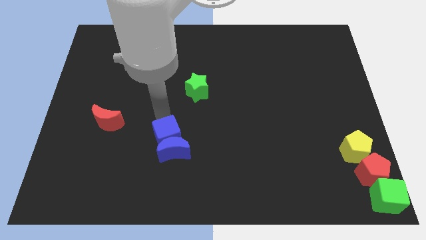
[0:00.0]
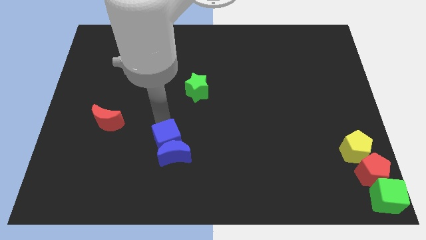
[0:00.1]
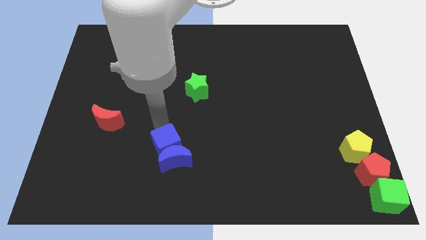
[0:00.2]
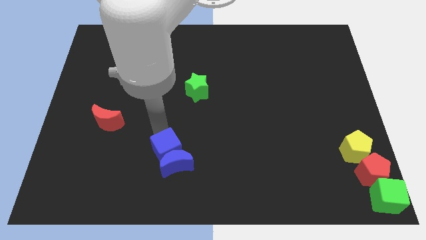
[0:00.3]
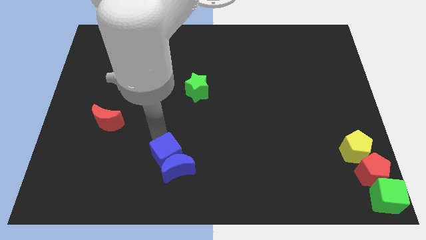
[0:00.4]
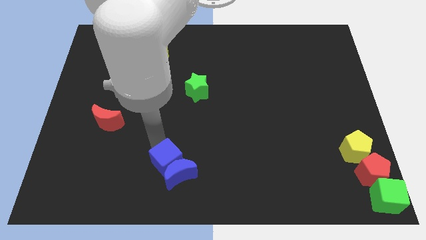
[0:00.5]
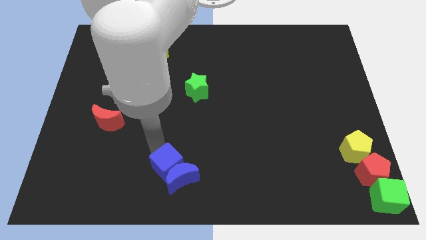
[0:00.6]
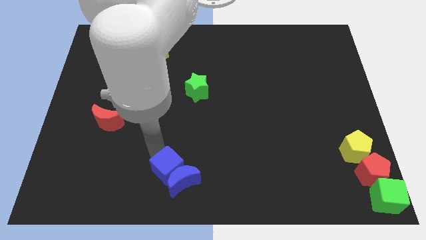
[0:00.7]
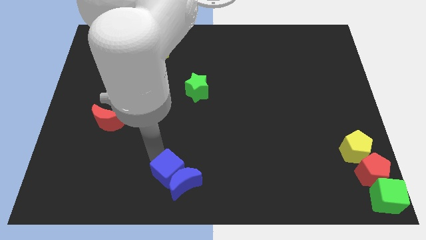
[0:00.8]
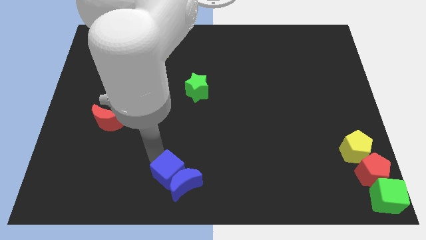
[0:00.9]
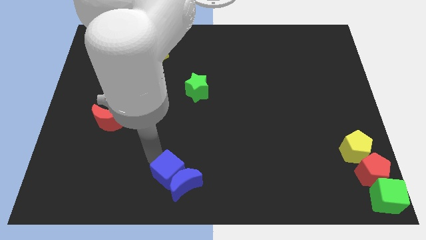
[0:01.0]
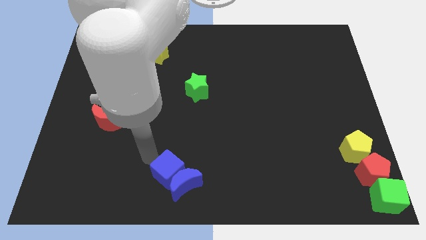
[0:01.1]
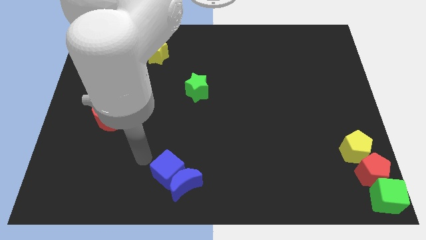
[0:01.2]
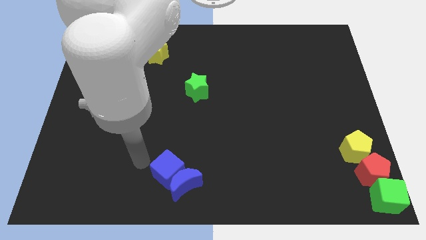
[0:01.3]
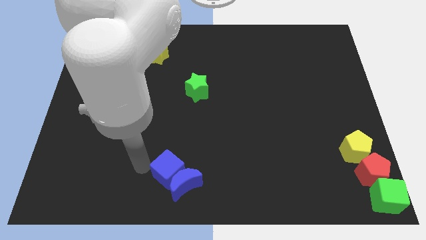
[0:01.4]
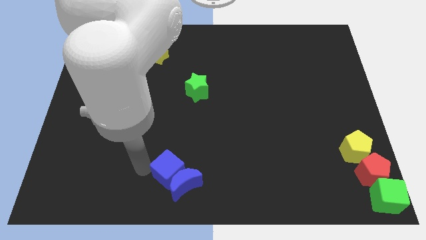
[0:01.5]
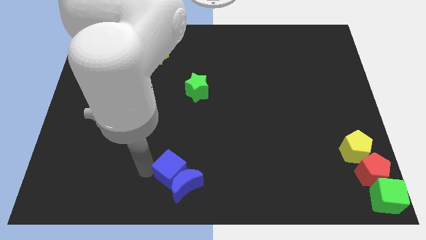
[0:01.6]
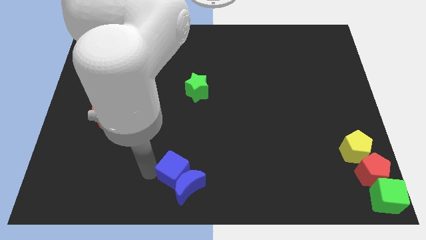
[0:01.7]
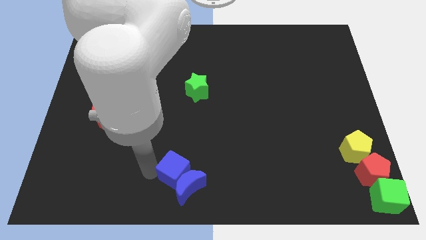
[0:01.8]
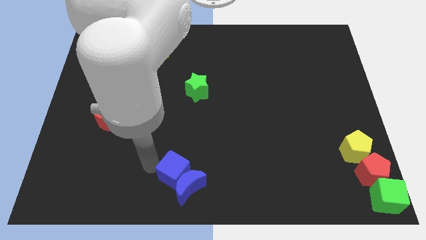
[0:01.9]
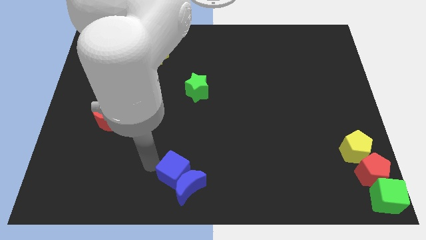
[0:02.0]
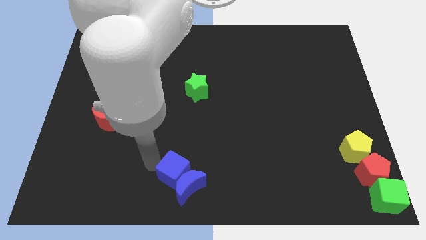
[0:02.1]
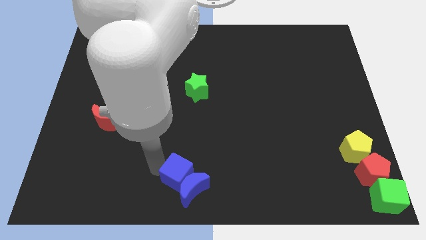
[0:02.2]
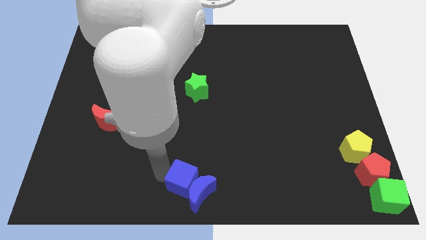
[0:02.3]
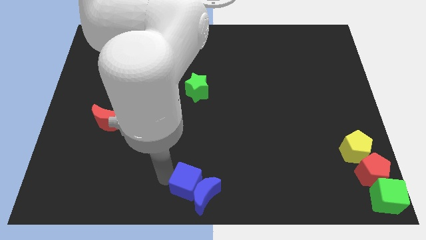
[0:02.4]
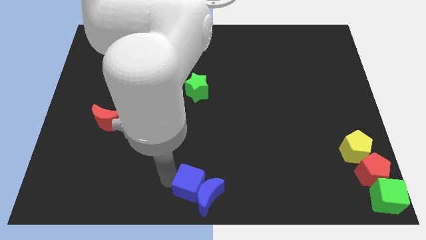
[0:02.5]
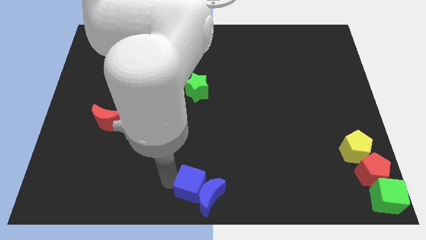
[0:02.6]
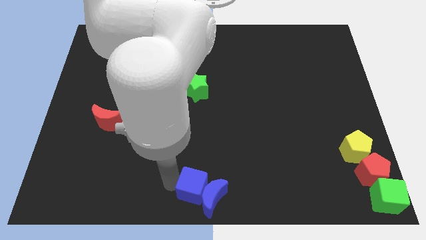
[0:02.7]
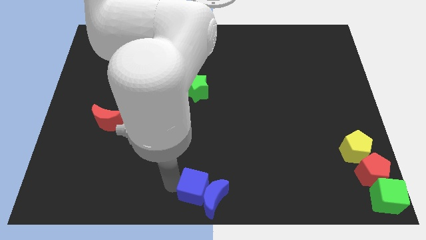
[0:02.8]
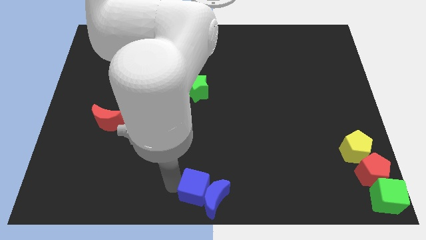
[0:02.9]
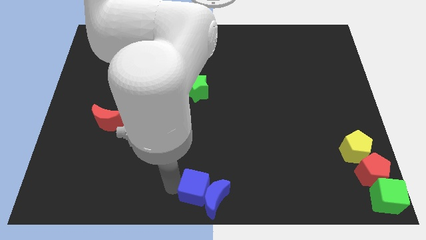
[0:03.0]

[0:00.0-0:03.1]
push the blue cube and blue crescent to the bottom center

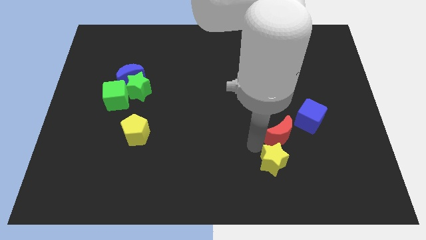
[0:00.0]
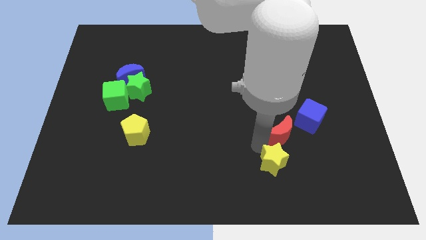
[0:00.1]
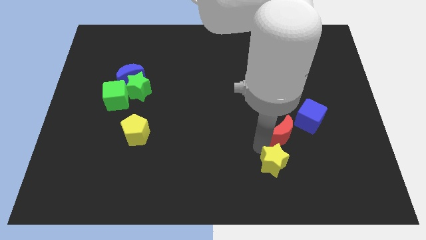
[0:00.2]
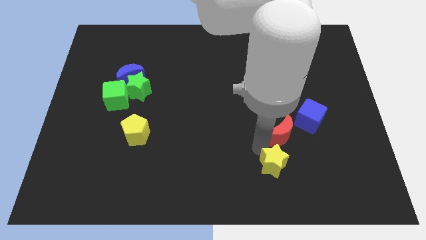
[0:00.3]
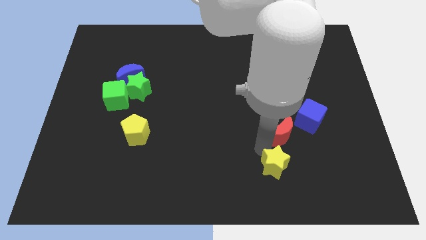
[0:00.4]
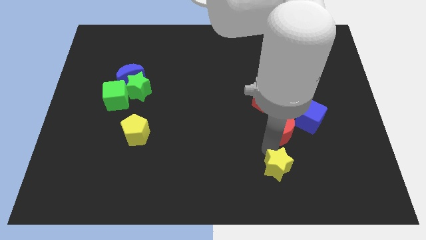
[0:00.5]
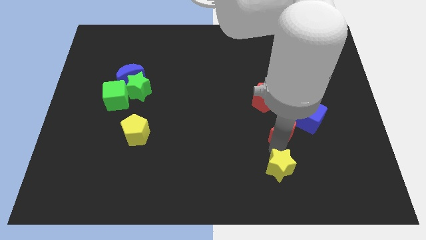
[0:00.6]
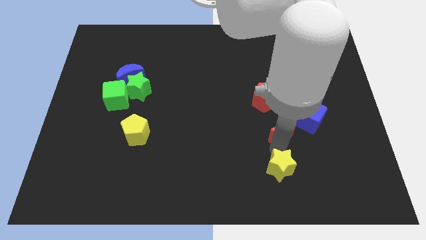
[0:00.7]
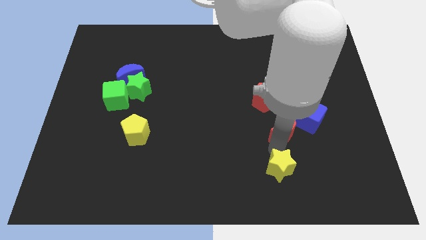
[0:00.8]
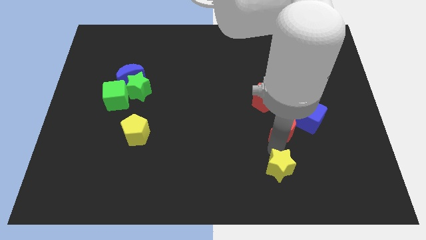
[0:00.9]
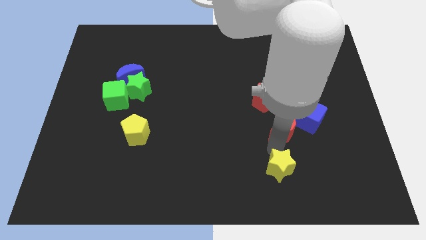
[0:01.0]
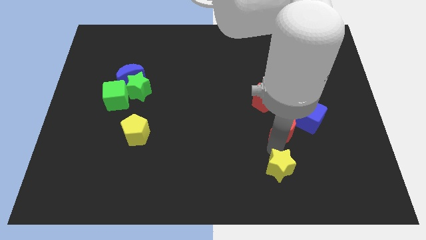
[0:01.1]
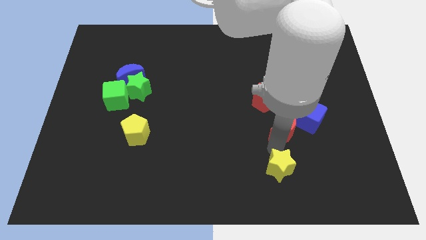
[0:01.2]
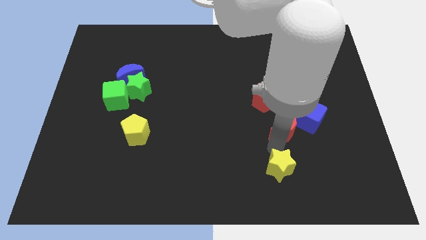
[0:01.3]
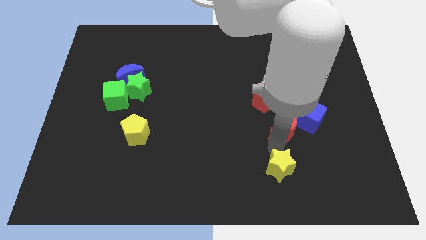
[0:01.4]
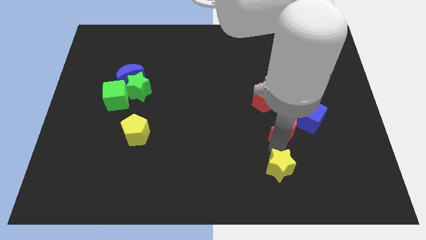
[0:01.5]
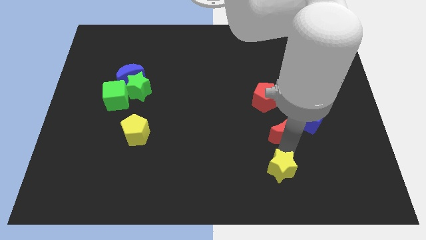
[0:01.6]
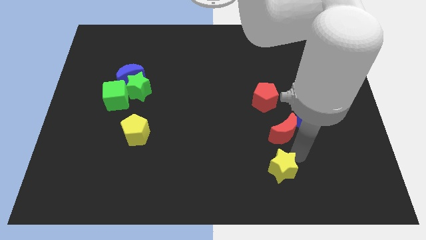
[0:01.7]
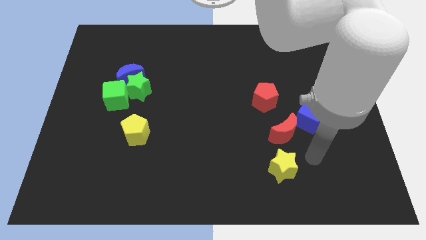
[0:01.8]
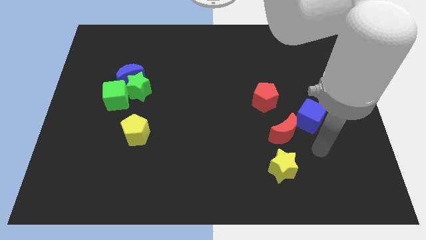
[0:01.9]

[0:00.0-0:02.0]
move your arm close to the yellow star

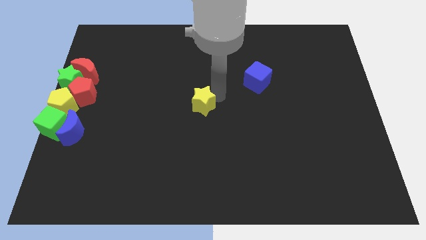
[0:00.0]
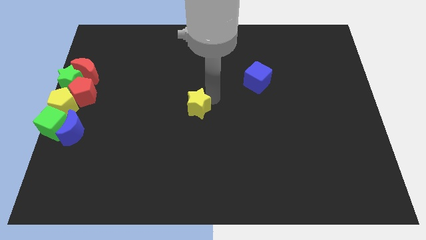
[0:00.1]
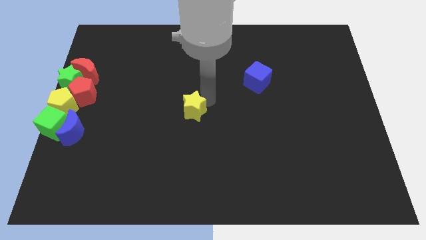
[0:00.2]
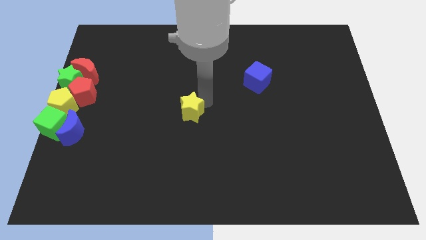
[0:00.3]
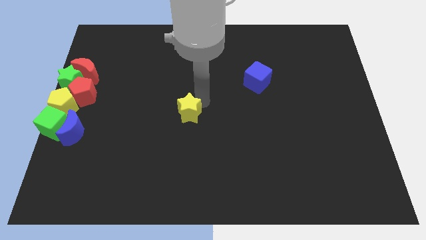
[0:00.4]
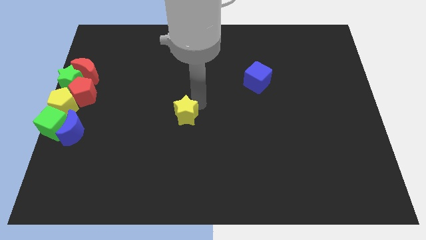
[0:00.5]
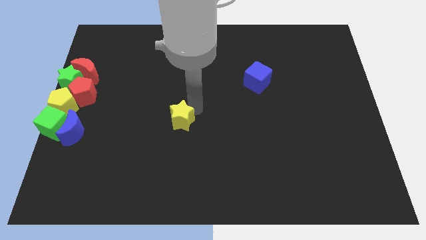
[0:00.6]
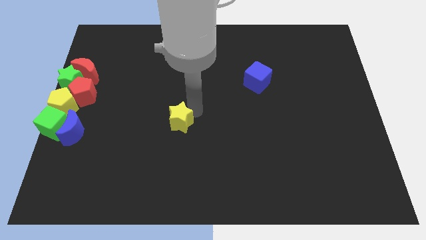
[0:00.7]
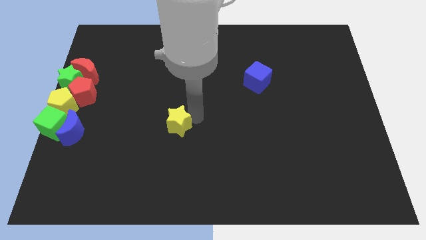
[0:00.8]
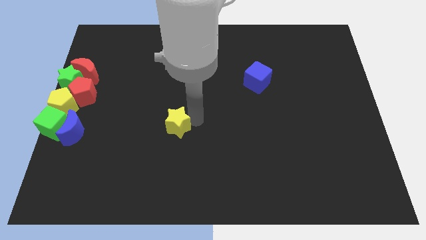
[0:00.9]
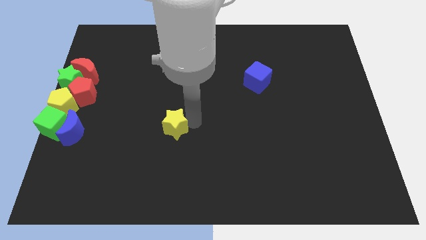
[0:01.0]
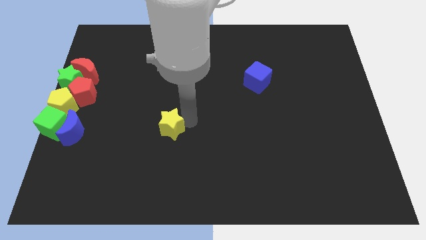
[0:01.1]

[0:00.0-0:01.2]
move the yellow star to the right of the blue crescent

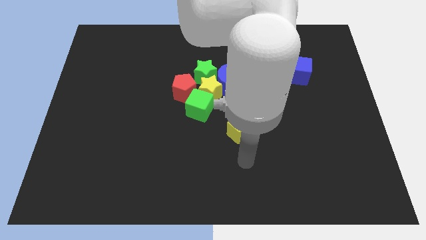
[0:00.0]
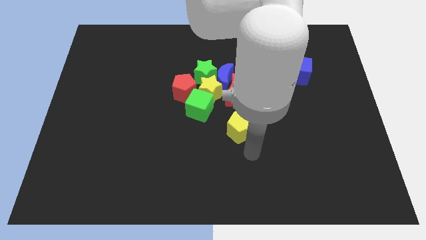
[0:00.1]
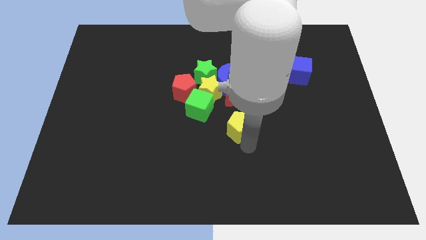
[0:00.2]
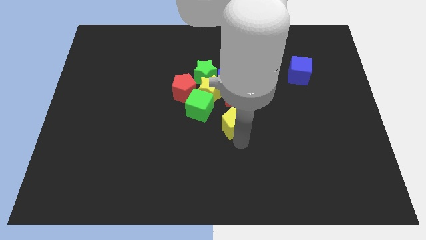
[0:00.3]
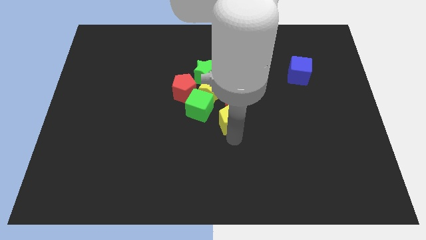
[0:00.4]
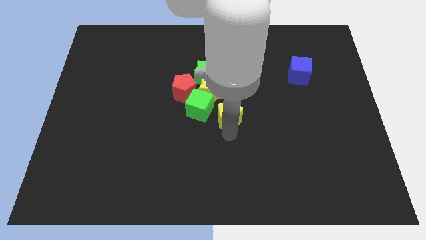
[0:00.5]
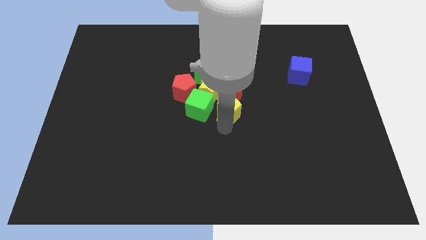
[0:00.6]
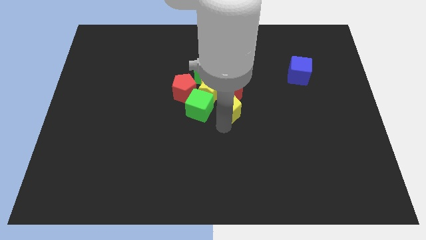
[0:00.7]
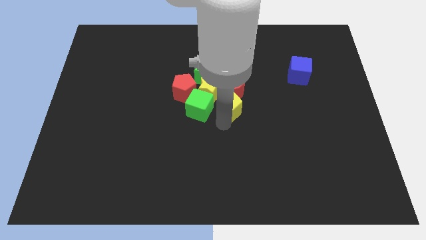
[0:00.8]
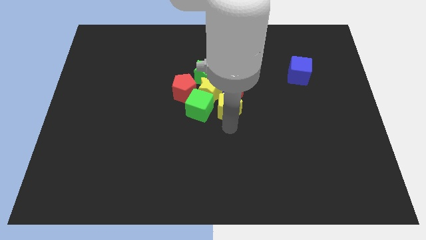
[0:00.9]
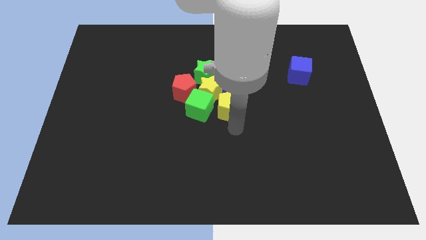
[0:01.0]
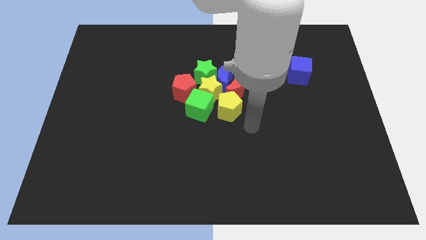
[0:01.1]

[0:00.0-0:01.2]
push the yellow pentagon into the red crescent

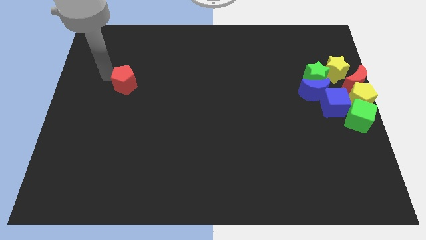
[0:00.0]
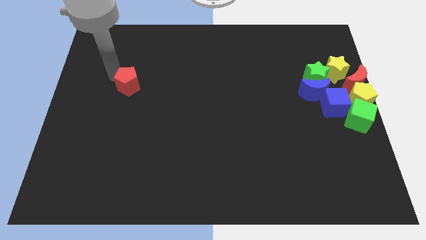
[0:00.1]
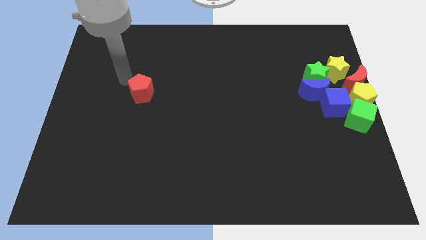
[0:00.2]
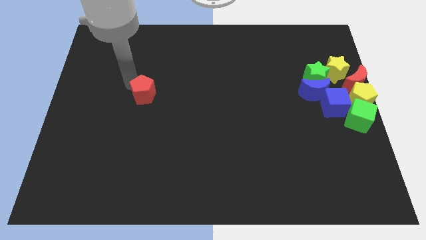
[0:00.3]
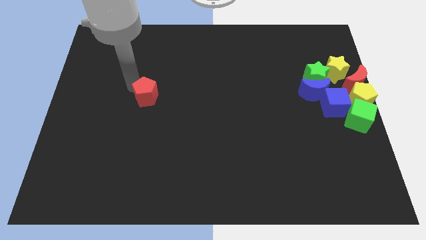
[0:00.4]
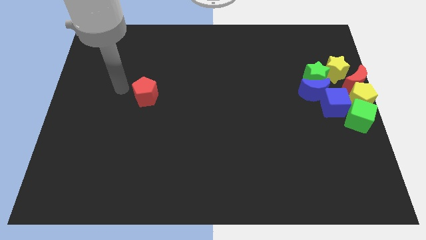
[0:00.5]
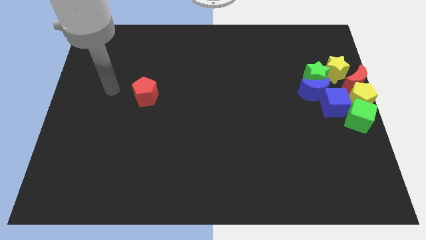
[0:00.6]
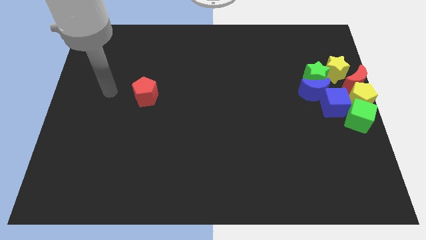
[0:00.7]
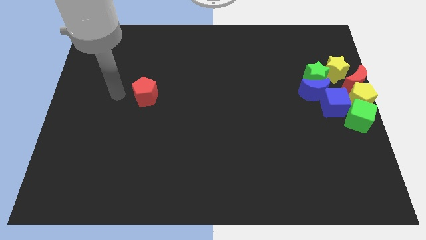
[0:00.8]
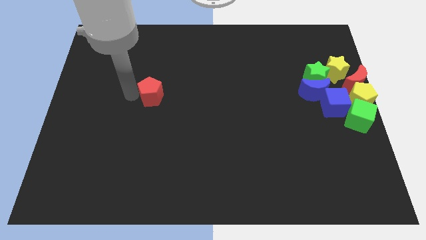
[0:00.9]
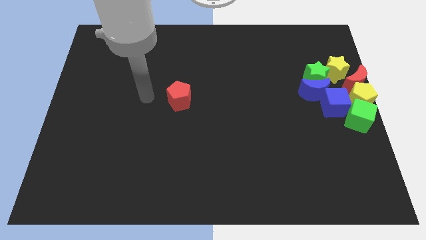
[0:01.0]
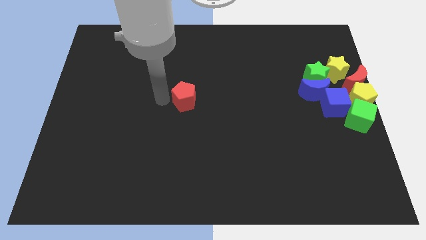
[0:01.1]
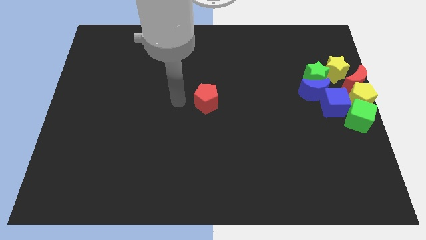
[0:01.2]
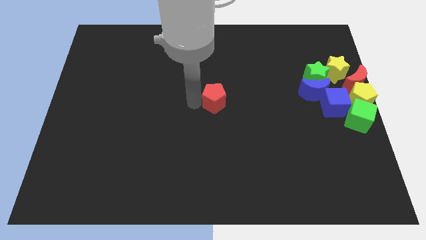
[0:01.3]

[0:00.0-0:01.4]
put the red pentagon at the center of the board
